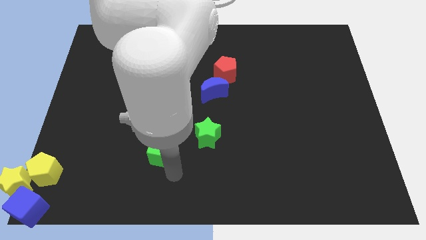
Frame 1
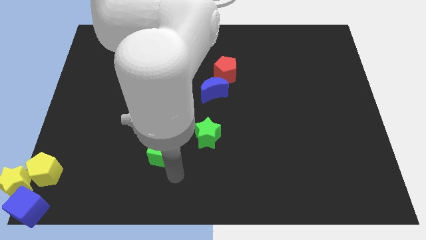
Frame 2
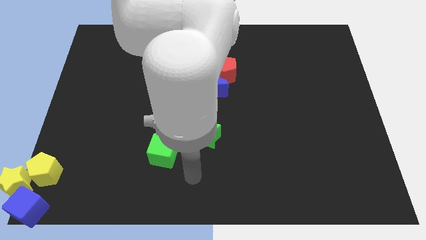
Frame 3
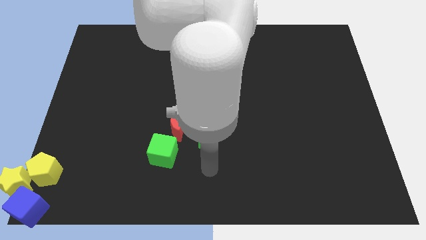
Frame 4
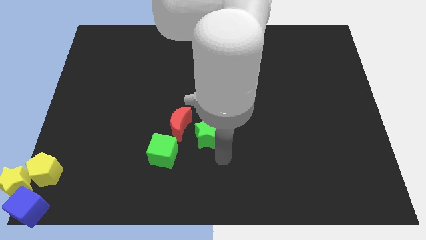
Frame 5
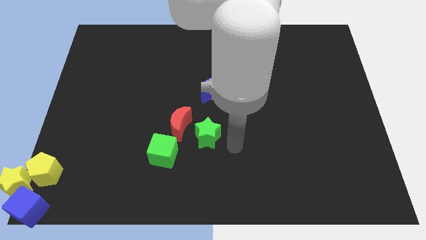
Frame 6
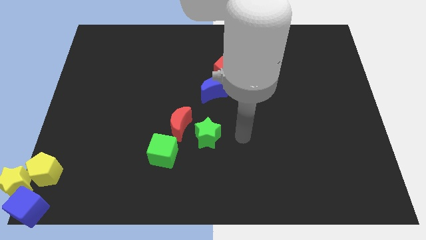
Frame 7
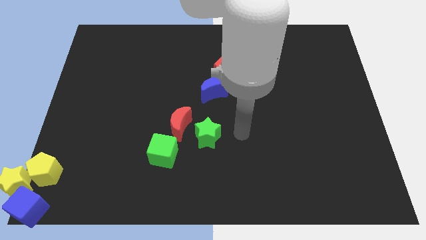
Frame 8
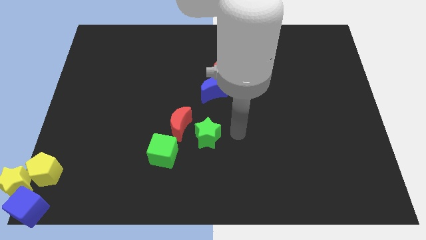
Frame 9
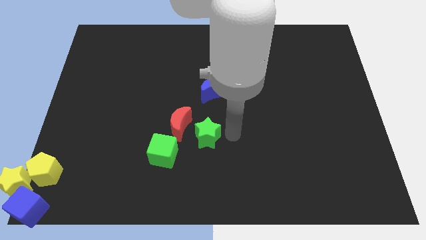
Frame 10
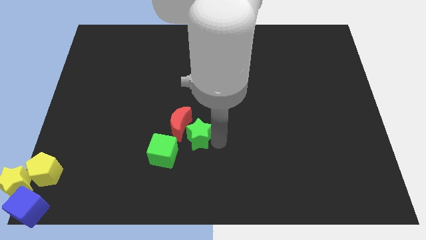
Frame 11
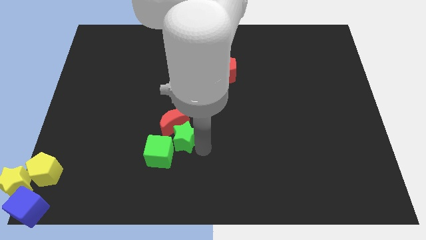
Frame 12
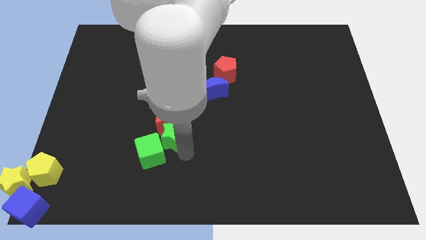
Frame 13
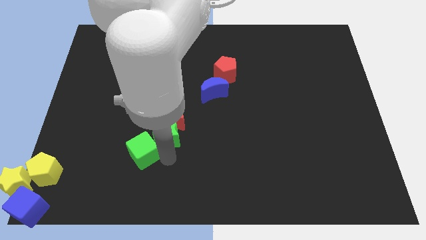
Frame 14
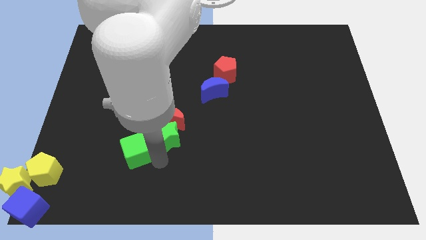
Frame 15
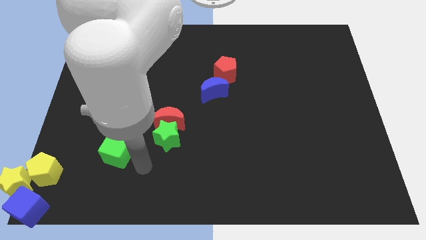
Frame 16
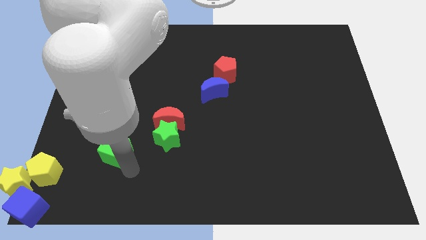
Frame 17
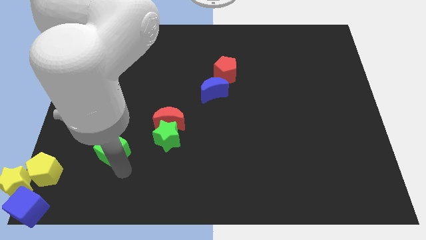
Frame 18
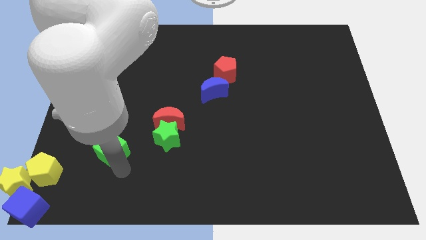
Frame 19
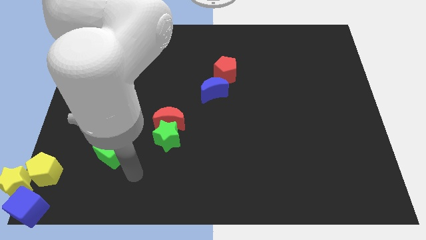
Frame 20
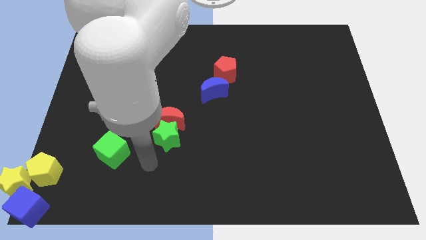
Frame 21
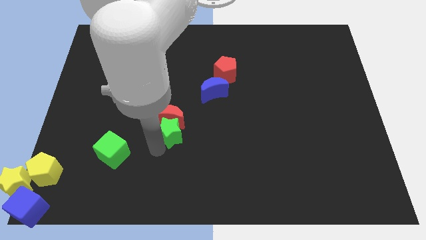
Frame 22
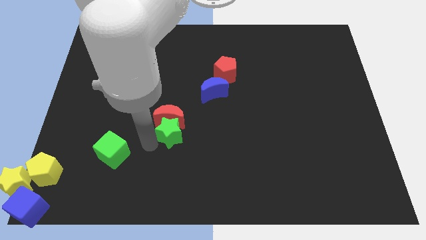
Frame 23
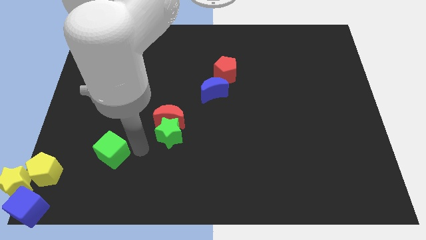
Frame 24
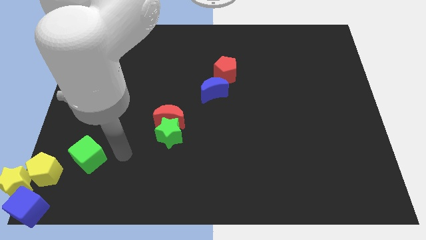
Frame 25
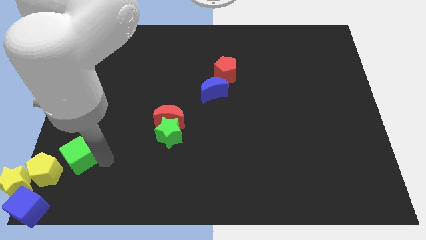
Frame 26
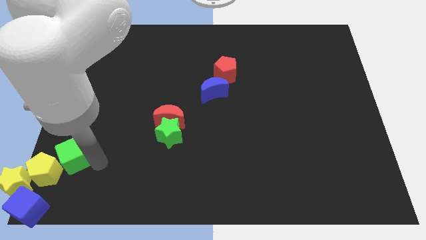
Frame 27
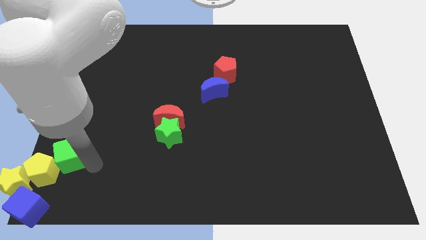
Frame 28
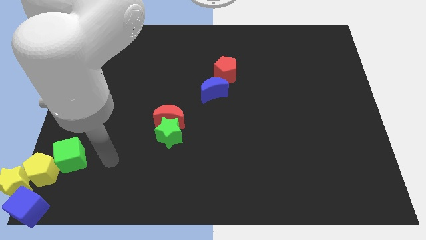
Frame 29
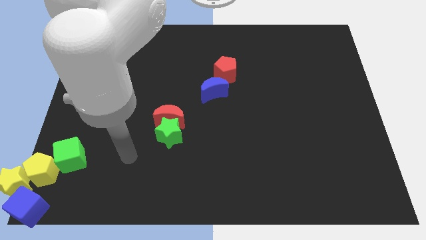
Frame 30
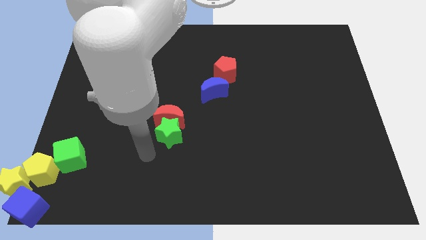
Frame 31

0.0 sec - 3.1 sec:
place green cube near yellow pentagon

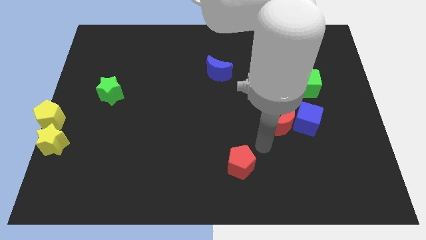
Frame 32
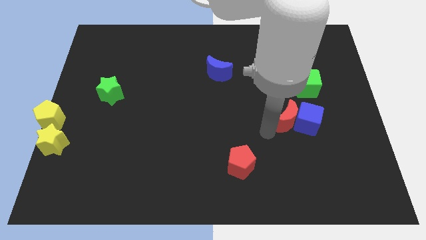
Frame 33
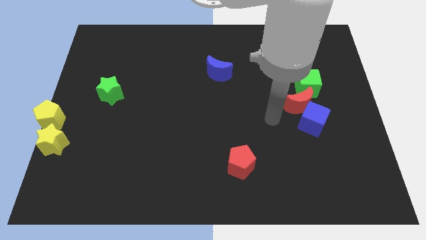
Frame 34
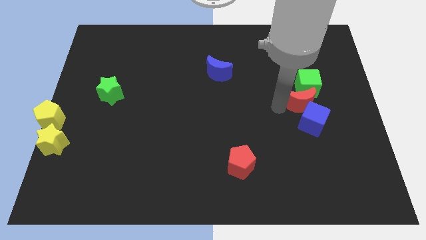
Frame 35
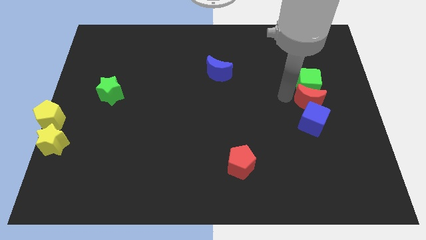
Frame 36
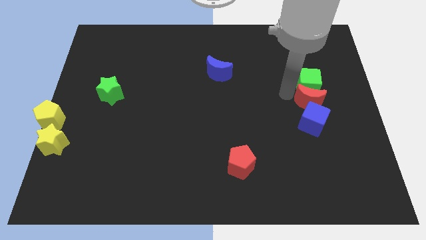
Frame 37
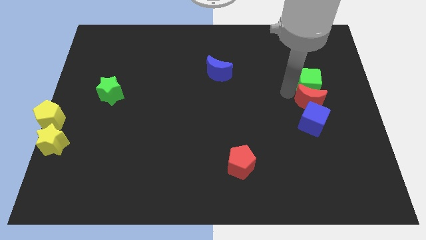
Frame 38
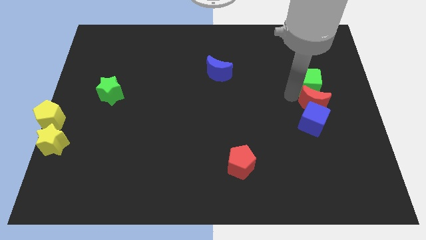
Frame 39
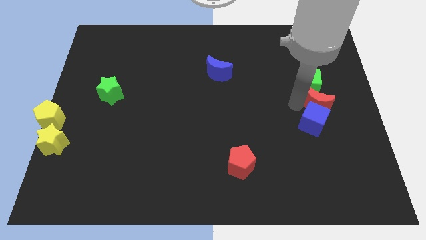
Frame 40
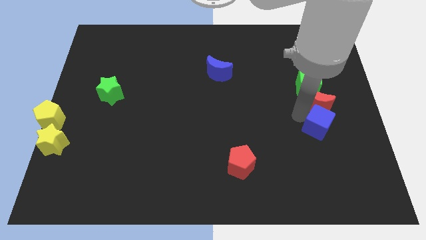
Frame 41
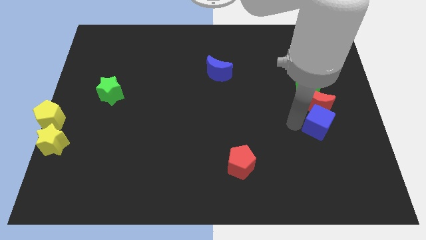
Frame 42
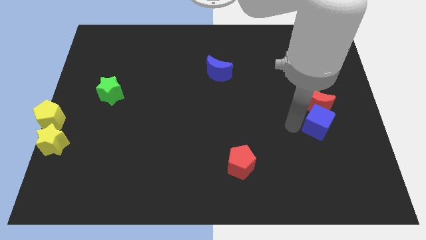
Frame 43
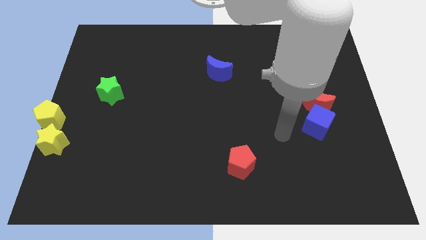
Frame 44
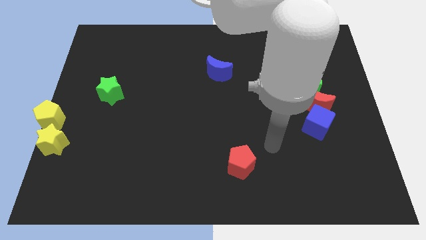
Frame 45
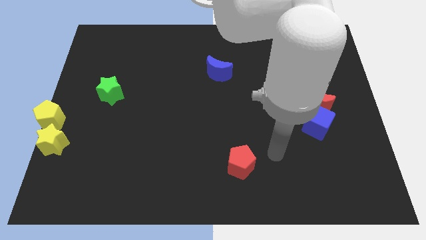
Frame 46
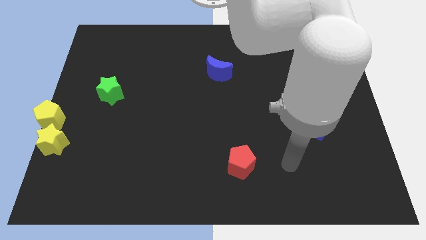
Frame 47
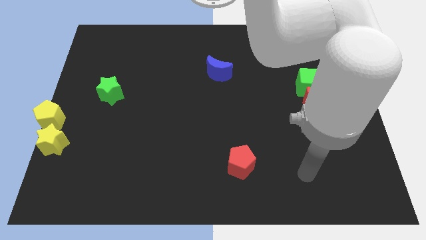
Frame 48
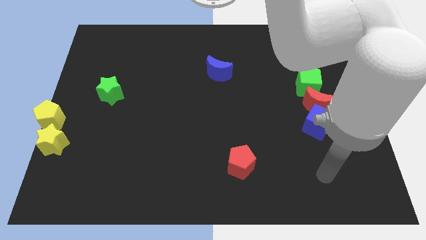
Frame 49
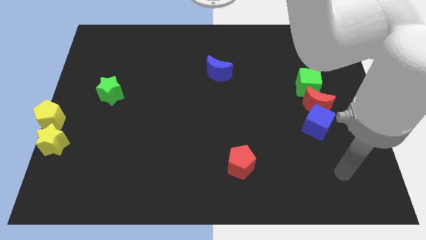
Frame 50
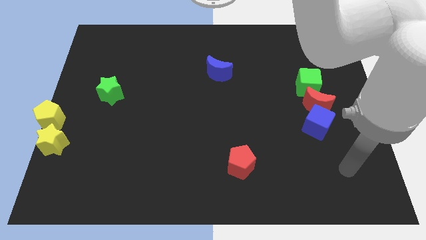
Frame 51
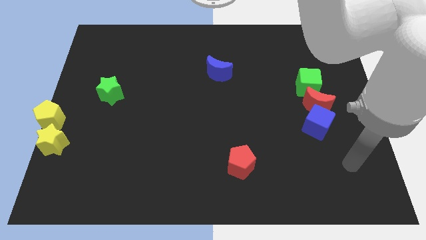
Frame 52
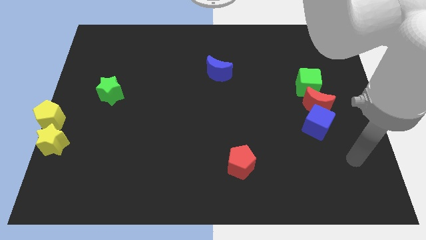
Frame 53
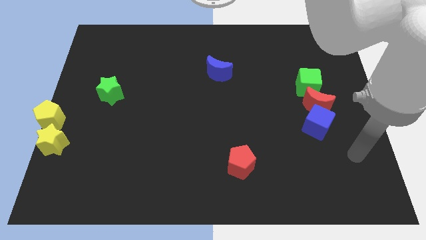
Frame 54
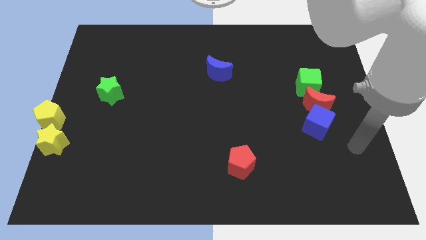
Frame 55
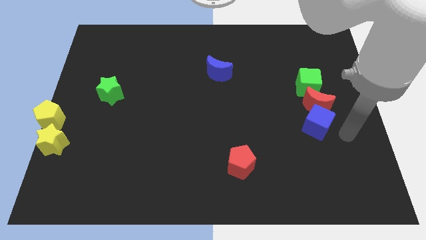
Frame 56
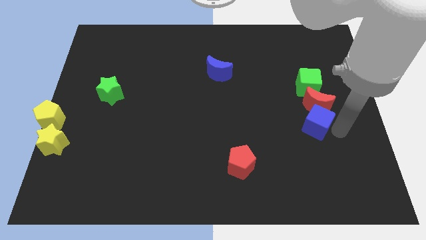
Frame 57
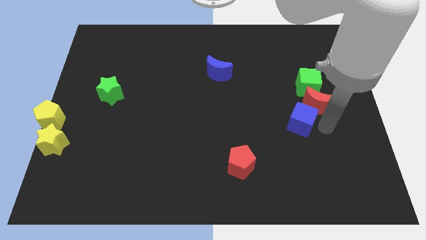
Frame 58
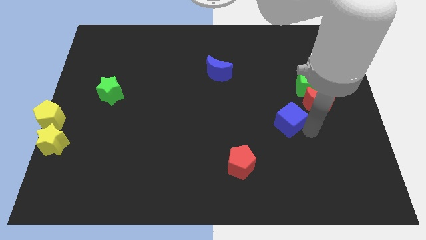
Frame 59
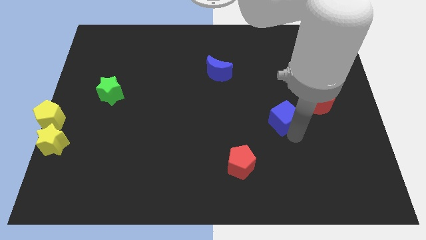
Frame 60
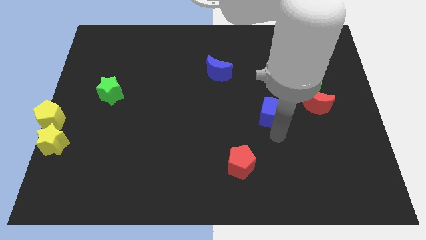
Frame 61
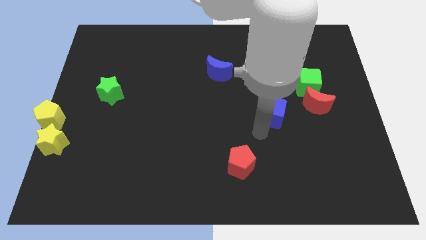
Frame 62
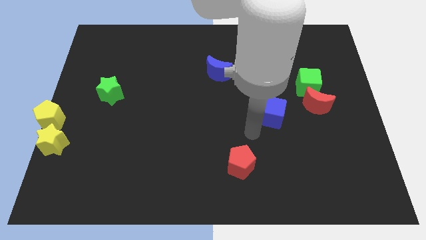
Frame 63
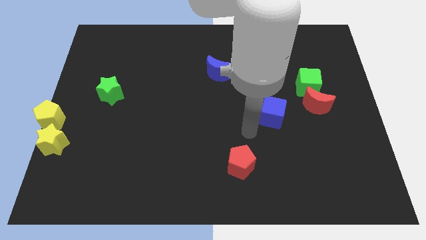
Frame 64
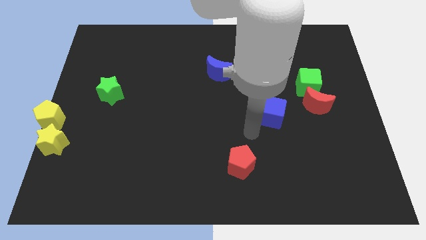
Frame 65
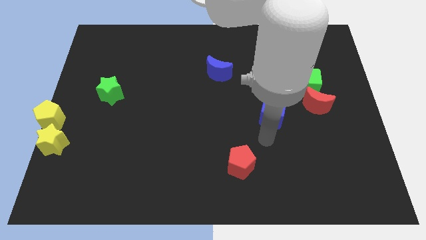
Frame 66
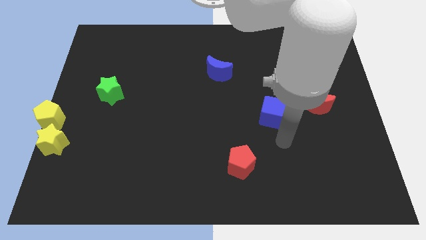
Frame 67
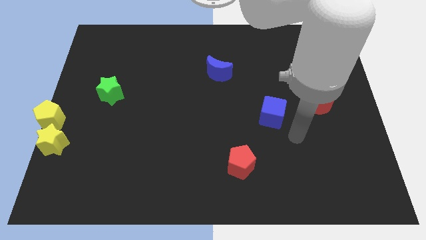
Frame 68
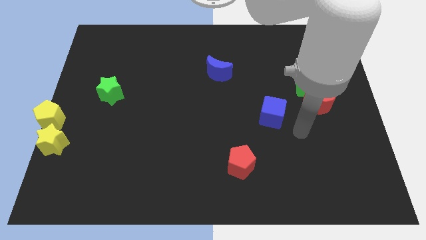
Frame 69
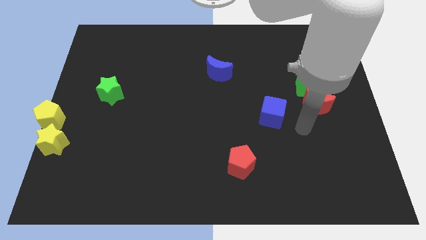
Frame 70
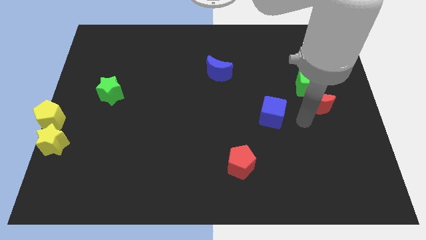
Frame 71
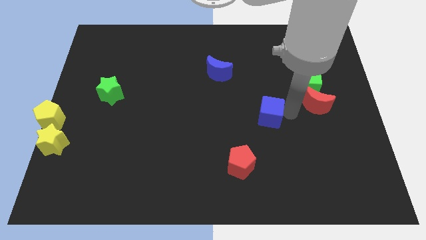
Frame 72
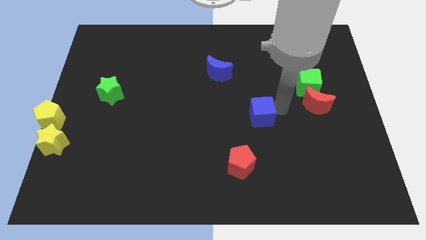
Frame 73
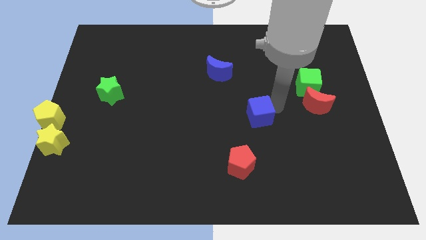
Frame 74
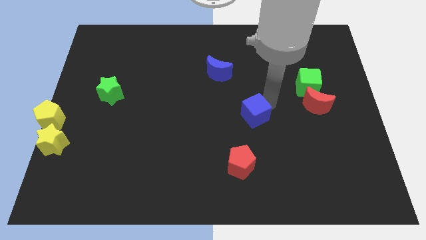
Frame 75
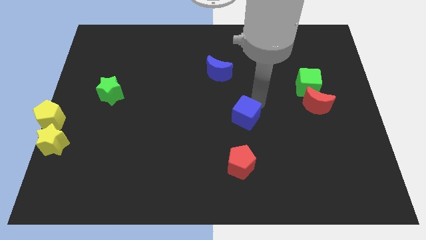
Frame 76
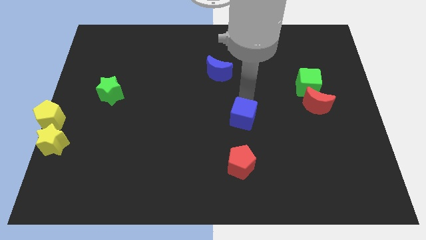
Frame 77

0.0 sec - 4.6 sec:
move the blue cube parallel top to the red pentagon

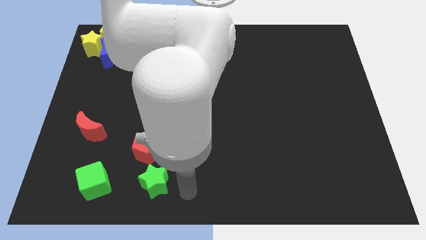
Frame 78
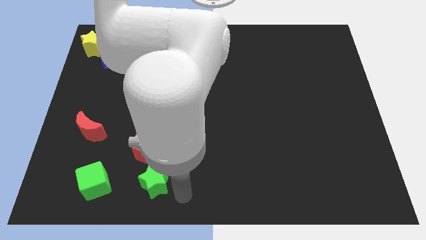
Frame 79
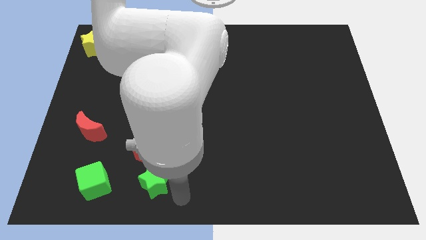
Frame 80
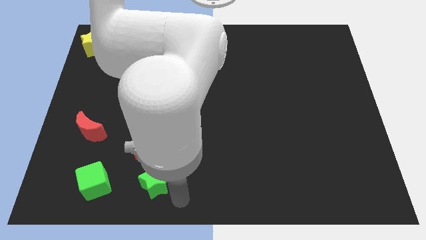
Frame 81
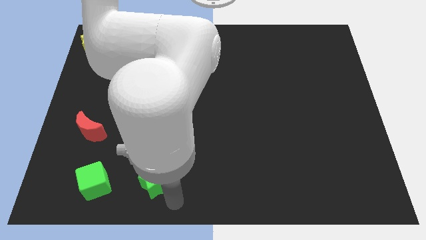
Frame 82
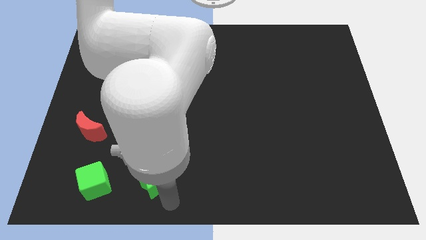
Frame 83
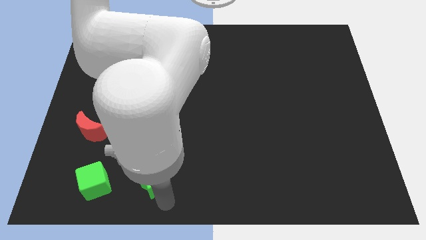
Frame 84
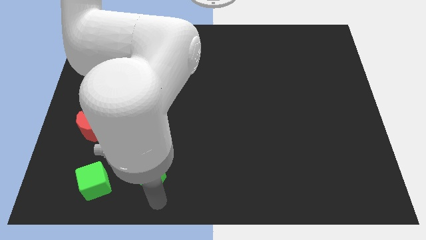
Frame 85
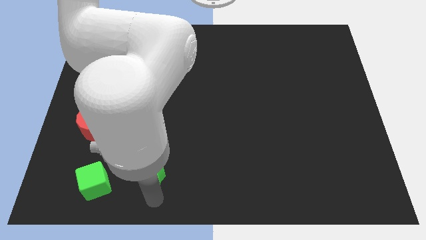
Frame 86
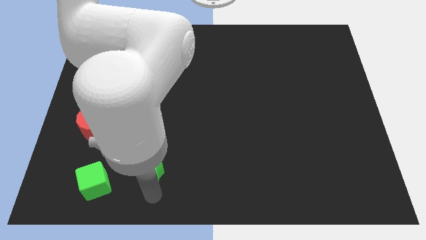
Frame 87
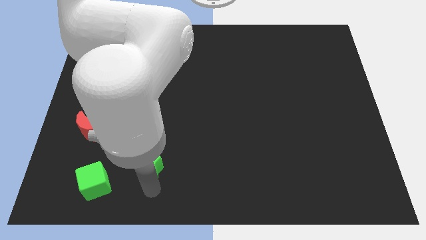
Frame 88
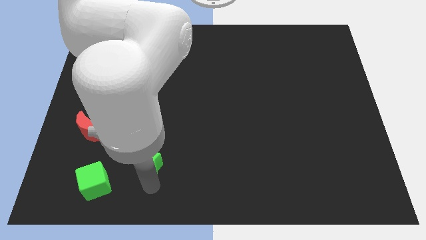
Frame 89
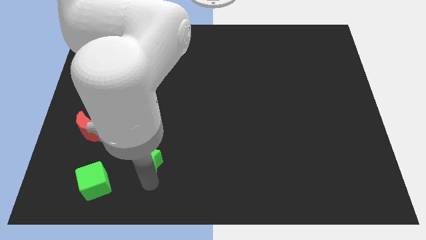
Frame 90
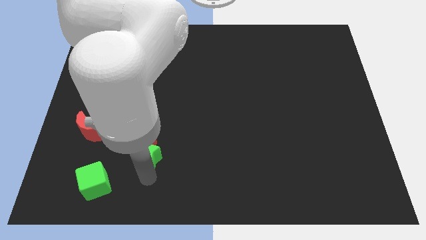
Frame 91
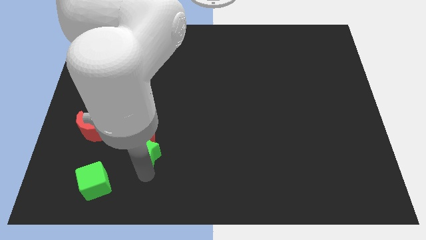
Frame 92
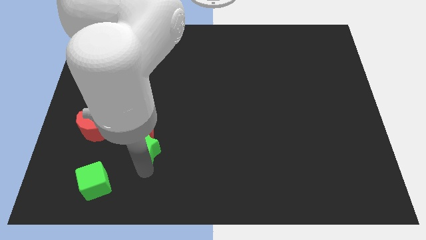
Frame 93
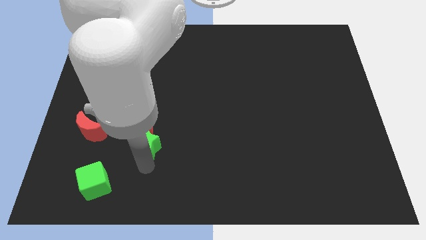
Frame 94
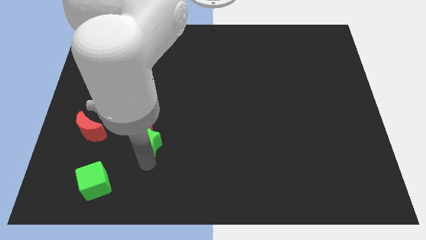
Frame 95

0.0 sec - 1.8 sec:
push the red pentagon with green star
